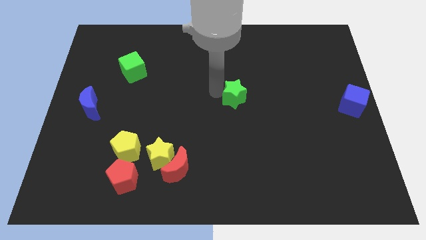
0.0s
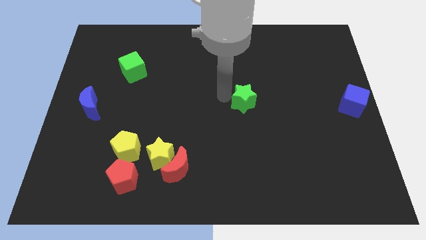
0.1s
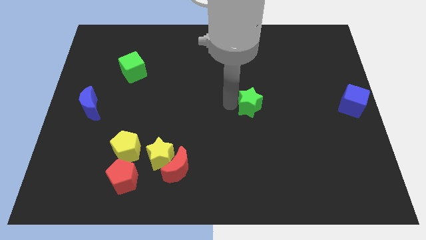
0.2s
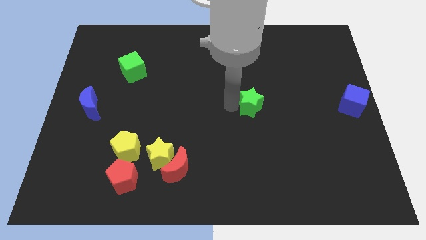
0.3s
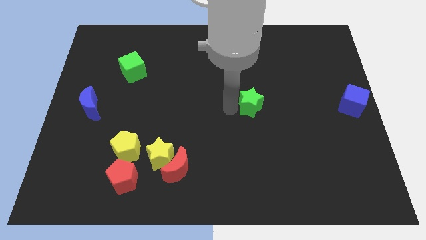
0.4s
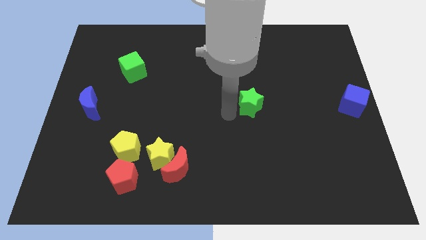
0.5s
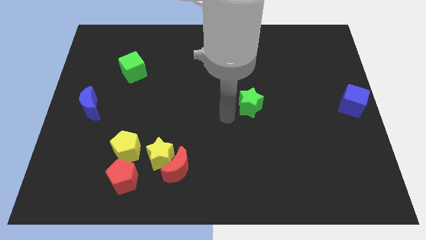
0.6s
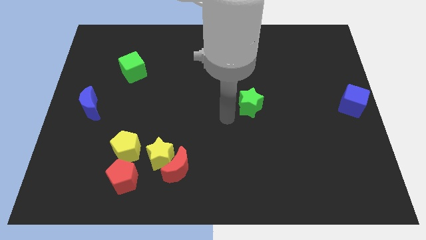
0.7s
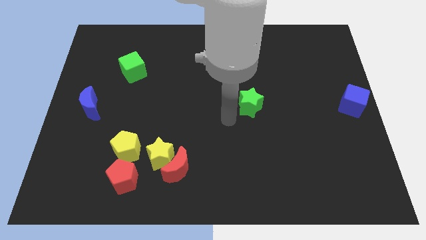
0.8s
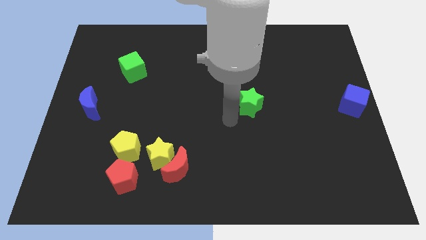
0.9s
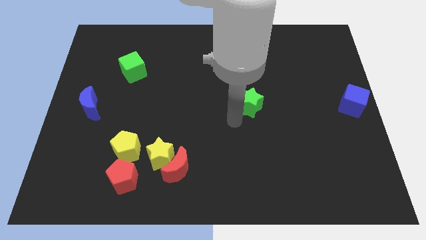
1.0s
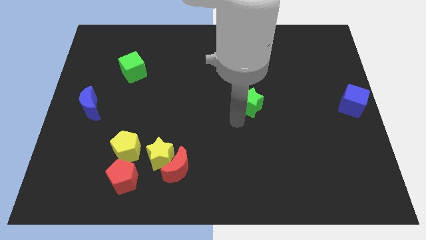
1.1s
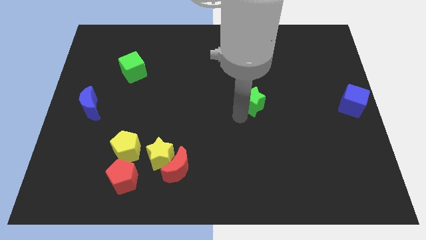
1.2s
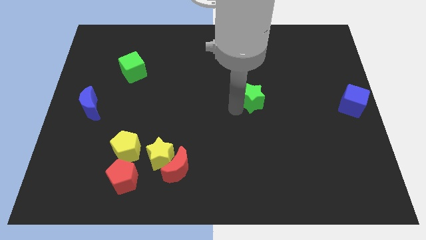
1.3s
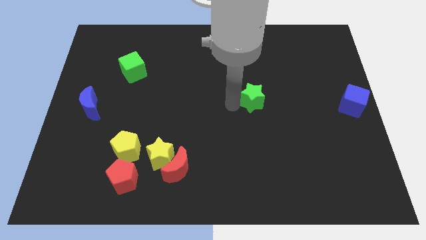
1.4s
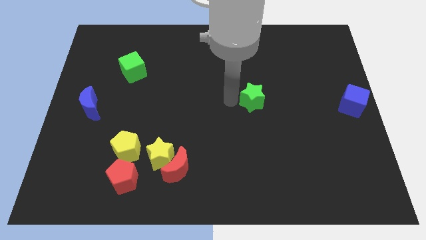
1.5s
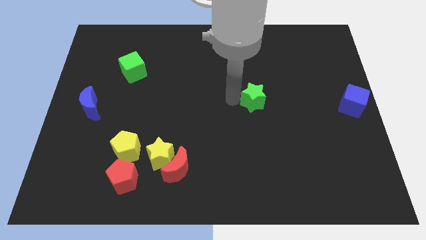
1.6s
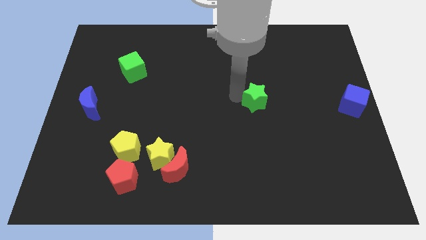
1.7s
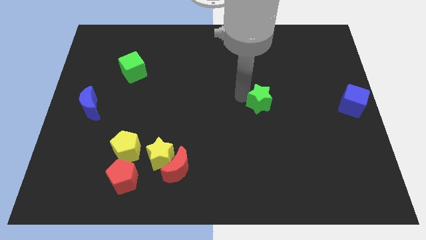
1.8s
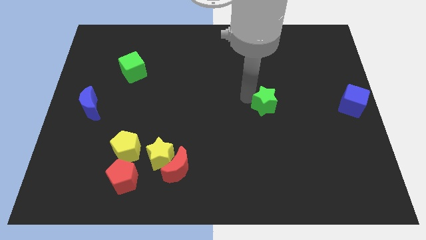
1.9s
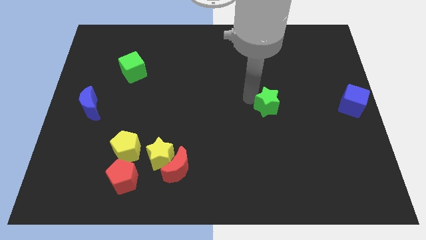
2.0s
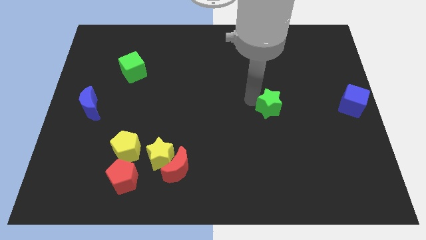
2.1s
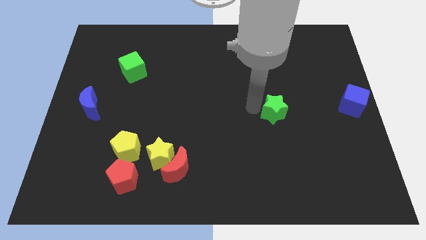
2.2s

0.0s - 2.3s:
move the green star towards the blue cube

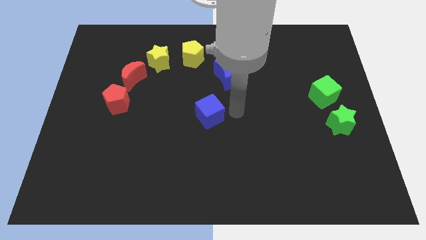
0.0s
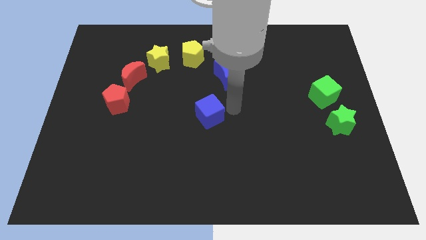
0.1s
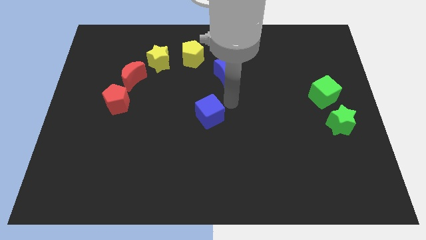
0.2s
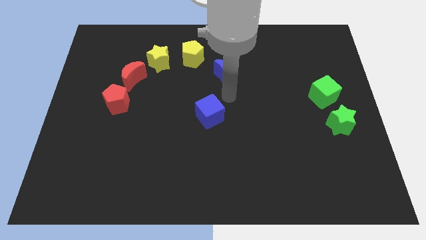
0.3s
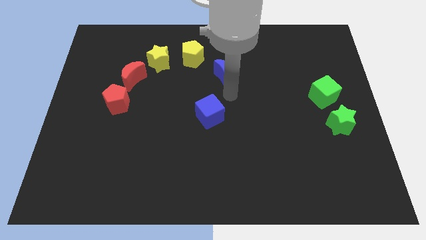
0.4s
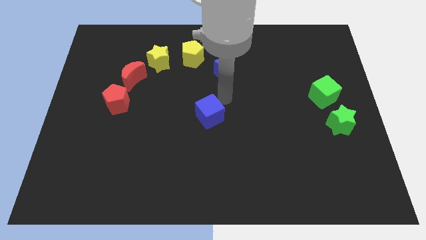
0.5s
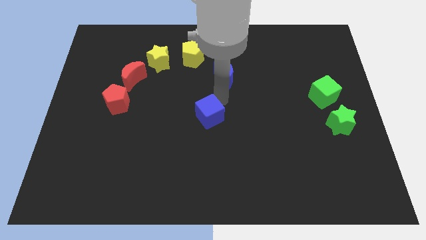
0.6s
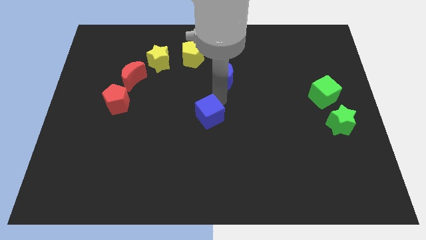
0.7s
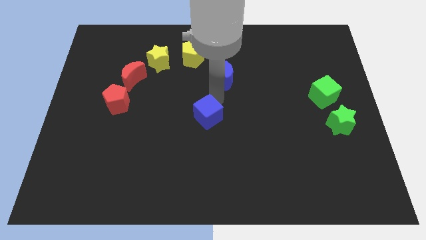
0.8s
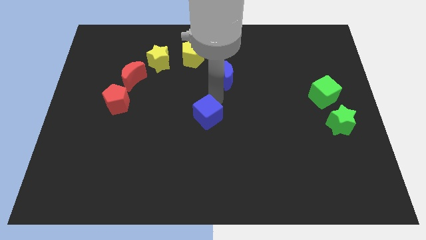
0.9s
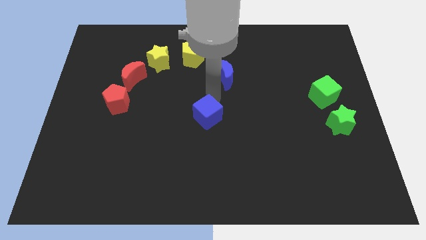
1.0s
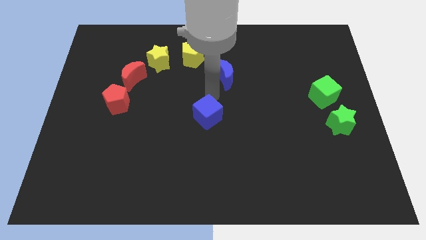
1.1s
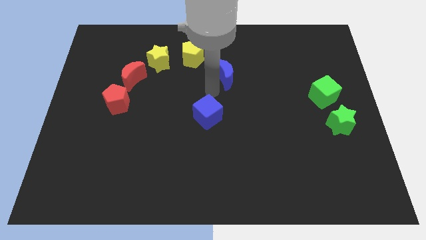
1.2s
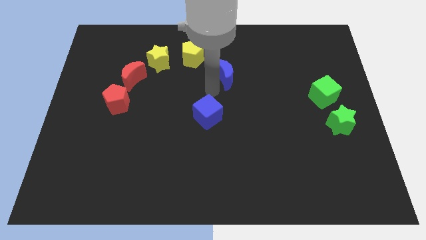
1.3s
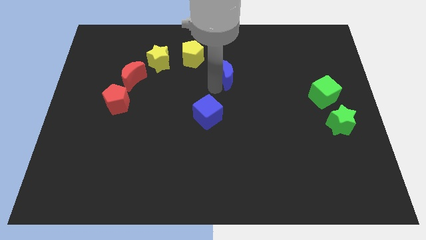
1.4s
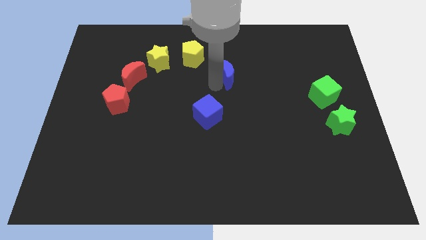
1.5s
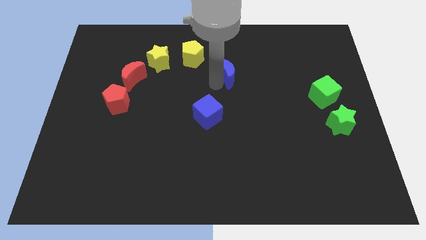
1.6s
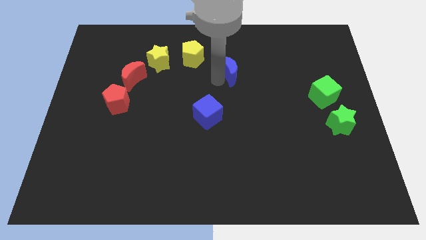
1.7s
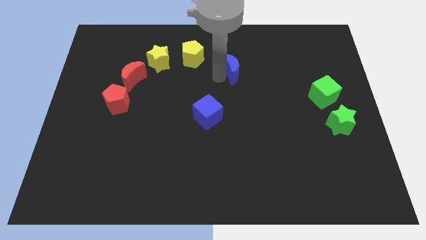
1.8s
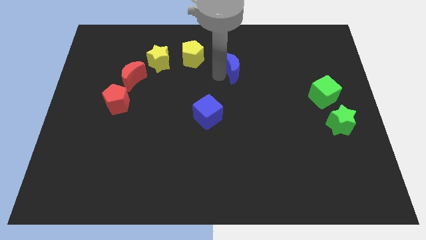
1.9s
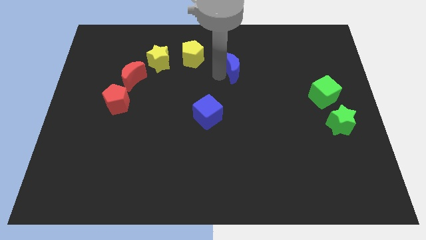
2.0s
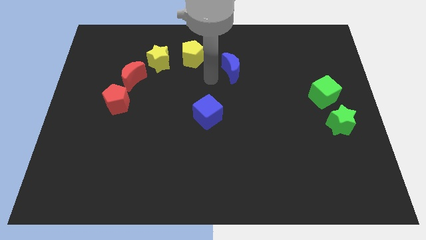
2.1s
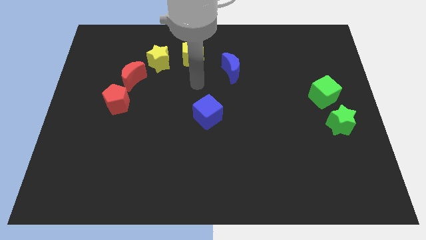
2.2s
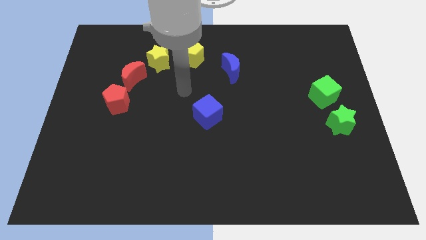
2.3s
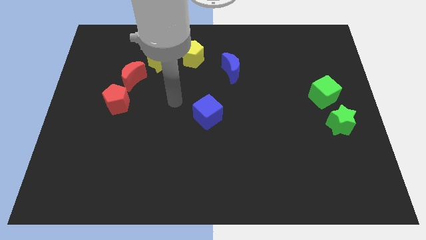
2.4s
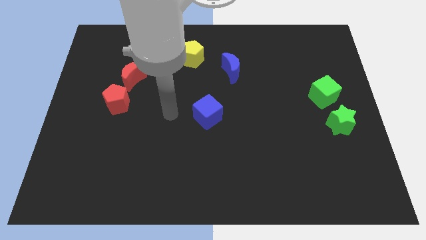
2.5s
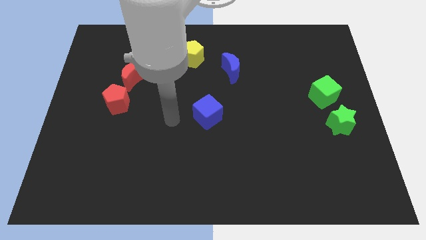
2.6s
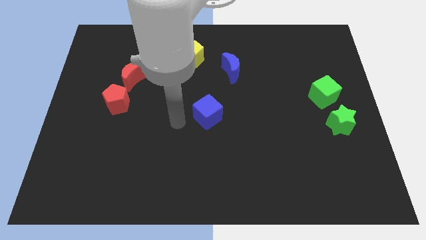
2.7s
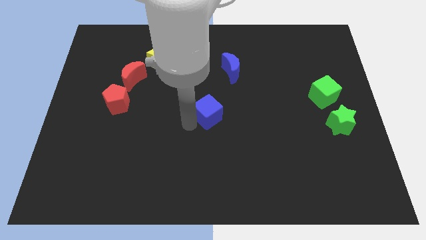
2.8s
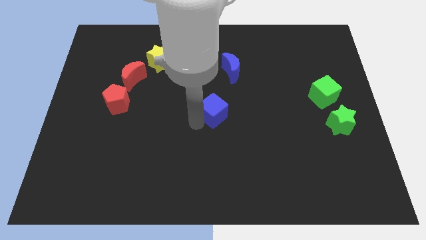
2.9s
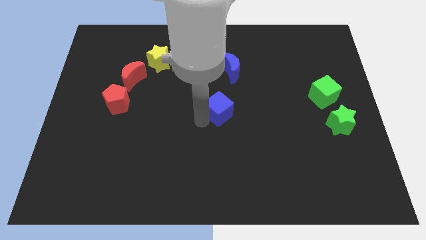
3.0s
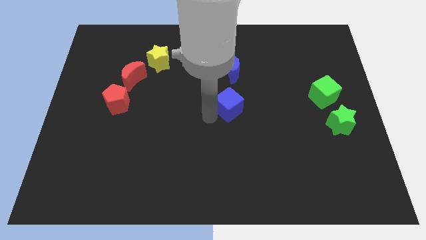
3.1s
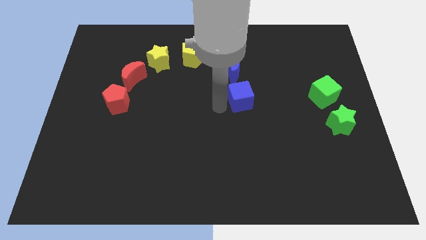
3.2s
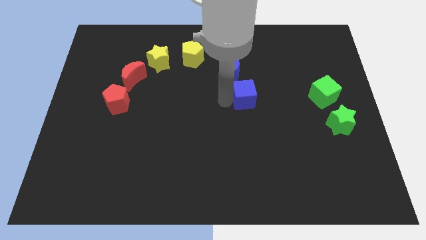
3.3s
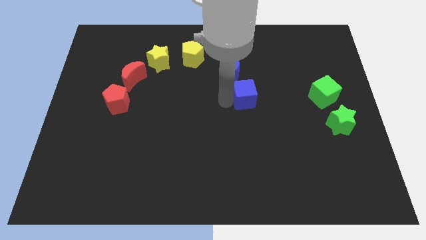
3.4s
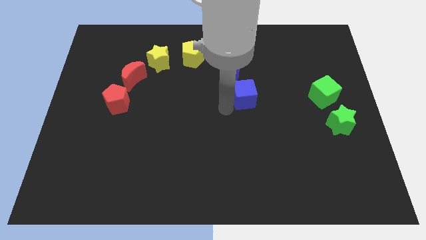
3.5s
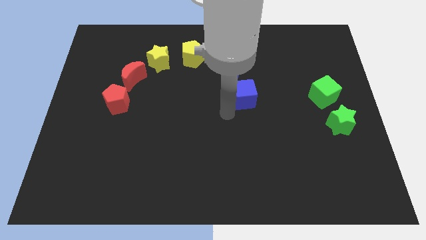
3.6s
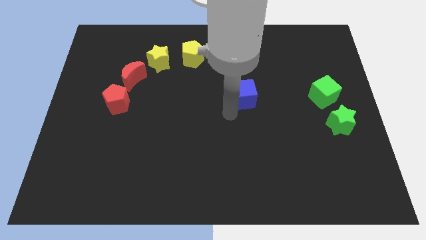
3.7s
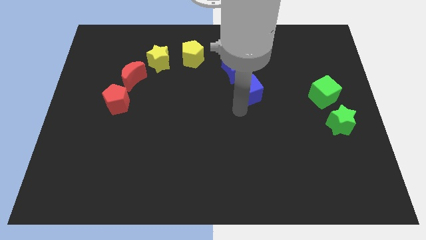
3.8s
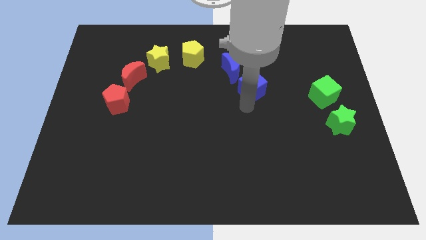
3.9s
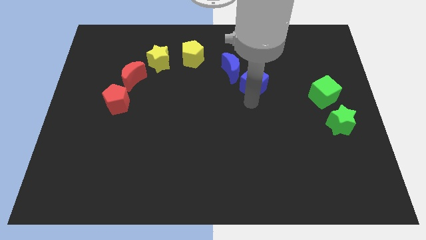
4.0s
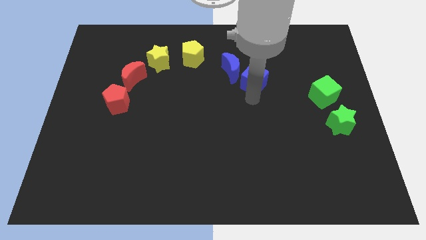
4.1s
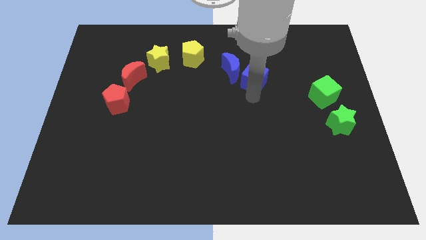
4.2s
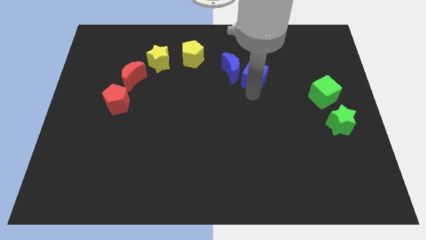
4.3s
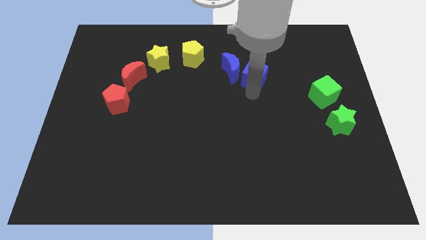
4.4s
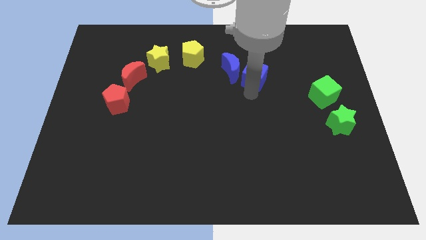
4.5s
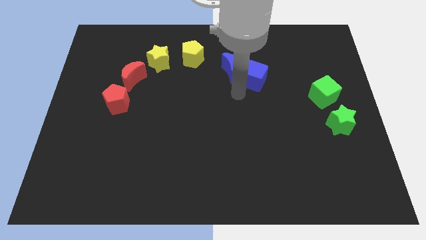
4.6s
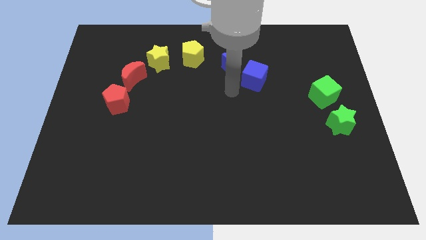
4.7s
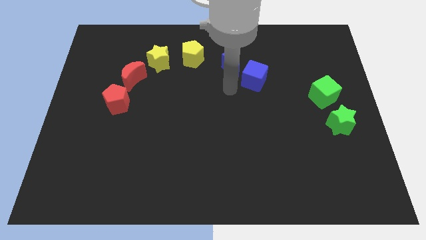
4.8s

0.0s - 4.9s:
place the blue cube right to the blue moon

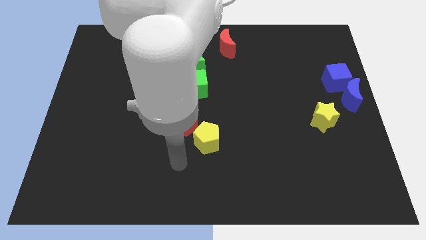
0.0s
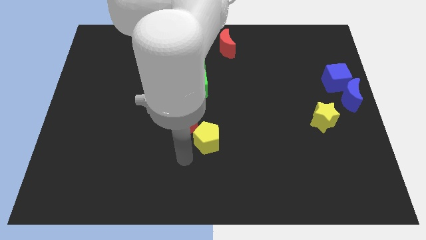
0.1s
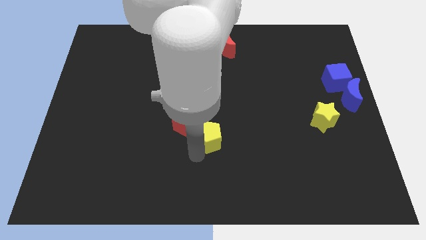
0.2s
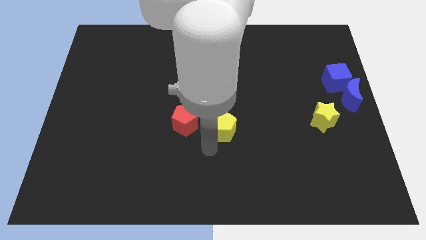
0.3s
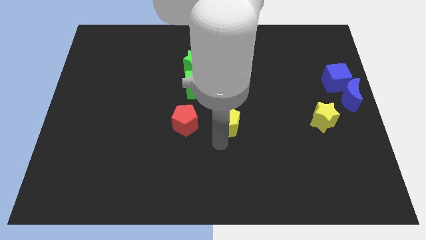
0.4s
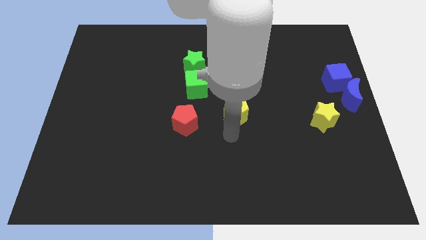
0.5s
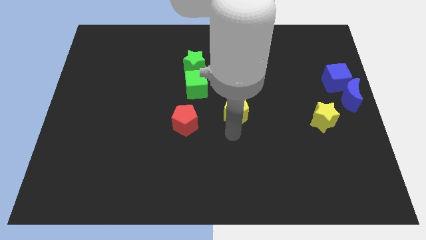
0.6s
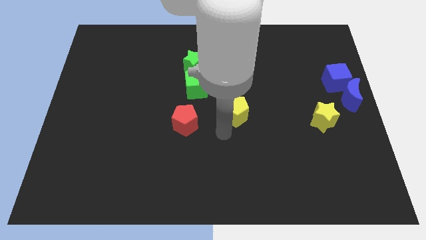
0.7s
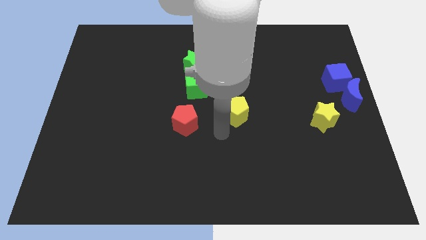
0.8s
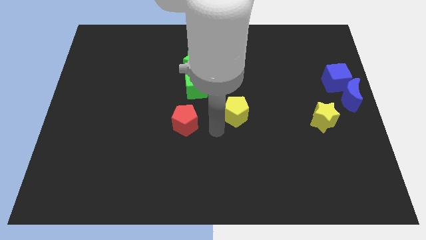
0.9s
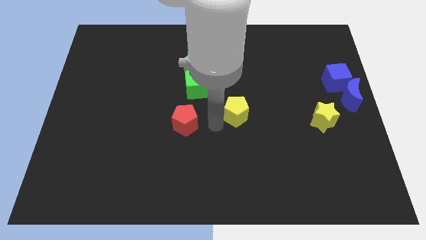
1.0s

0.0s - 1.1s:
separate yellow pentagon from red pentagon

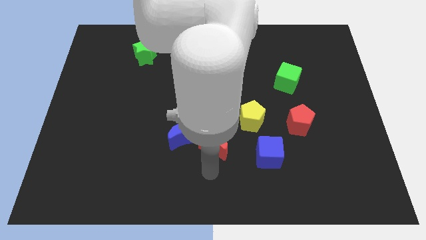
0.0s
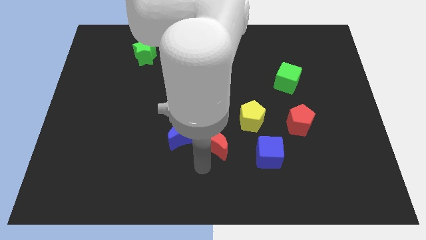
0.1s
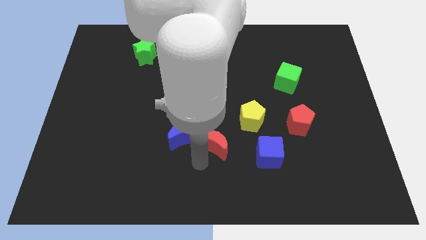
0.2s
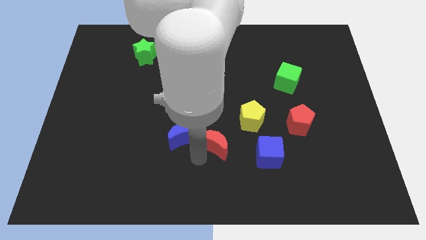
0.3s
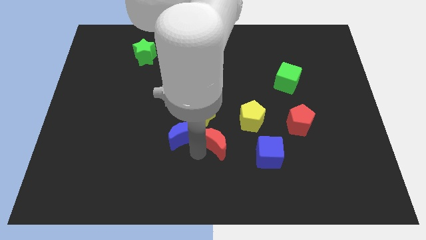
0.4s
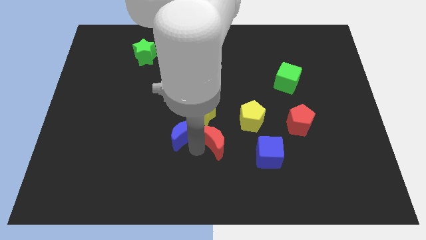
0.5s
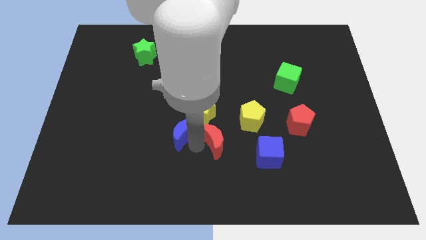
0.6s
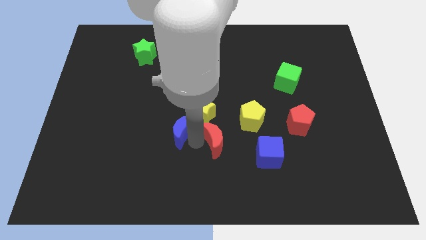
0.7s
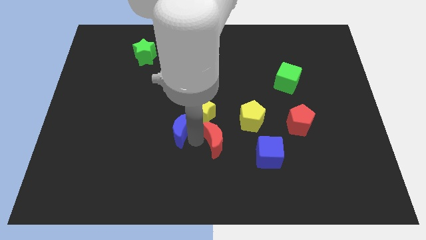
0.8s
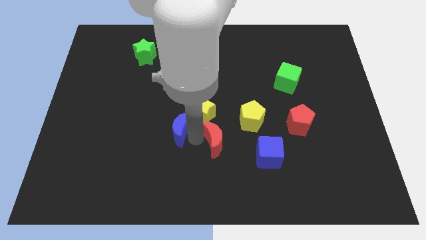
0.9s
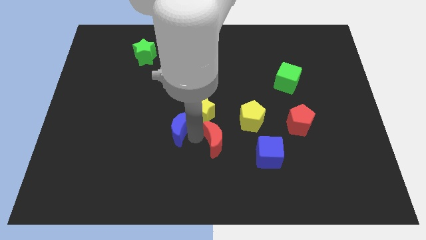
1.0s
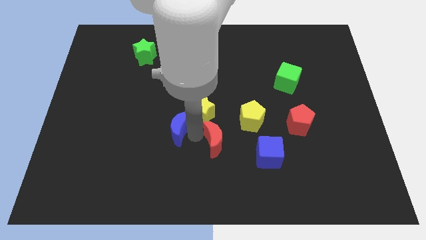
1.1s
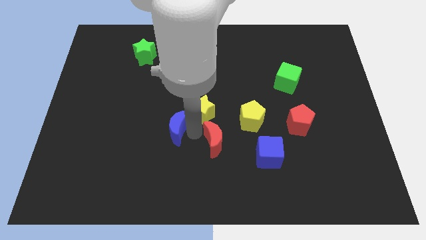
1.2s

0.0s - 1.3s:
separate red moon and blue moon
